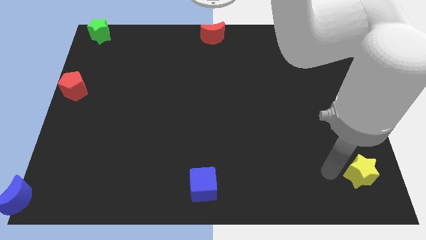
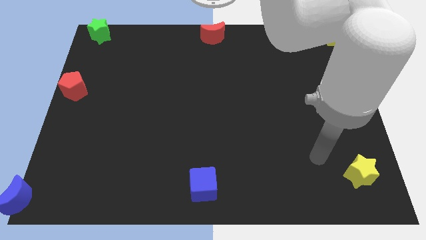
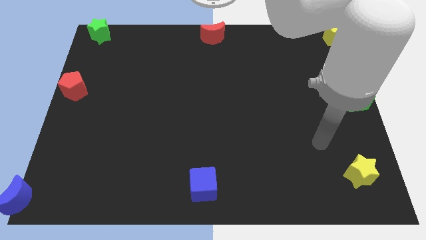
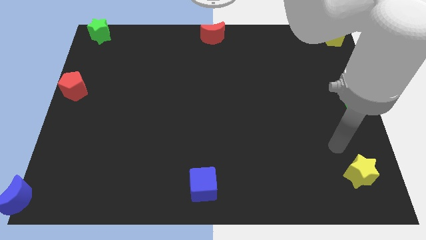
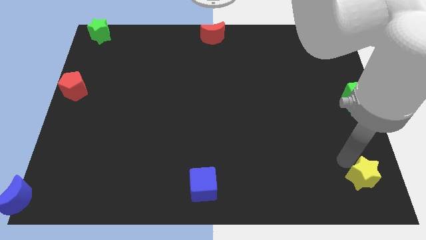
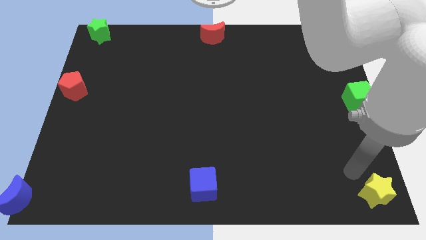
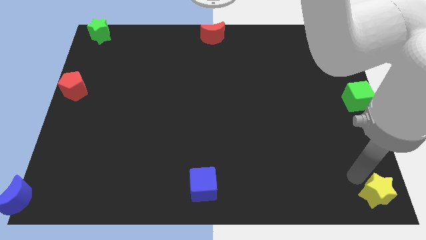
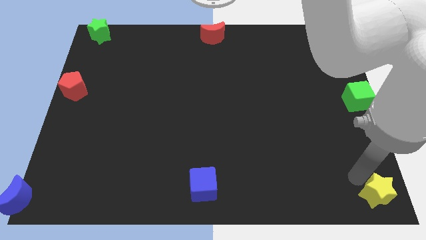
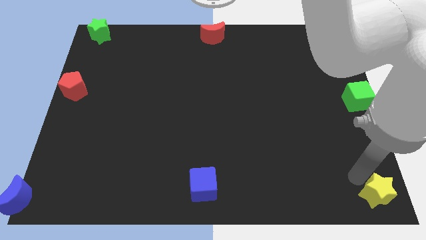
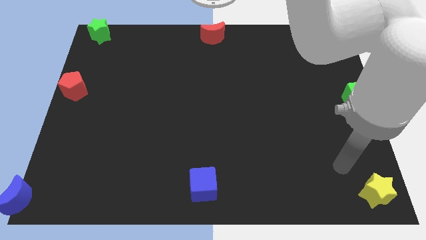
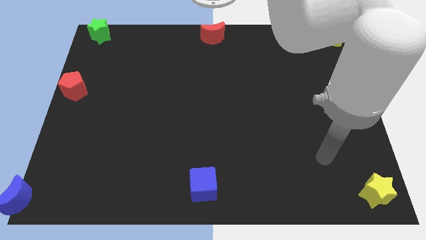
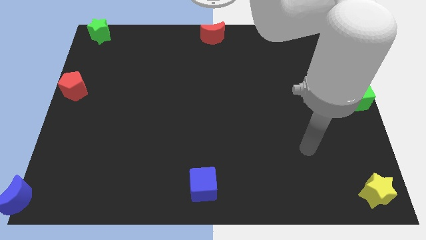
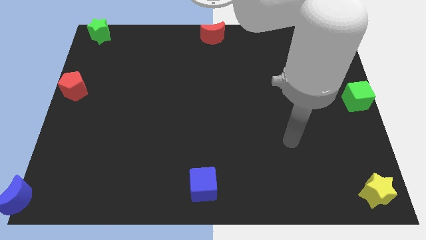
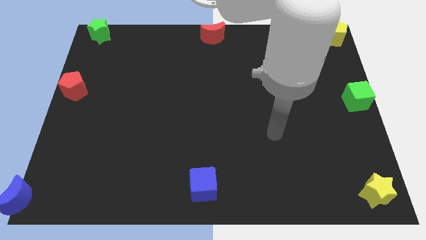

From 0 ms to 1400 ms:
push the yellow star move the arm away

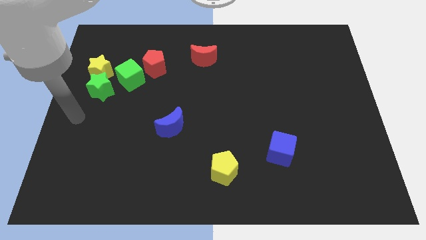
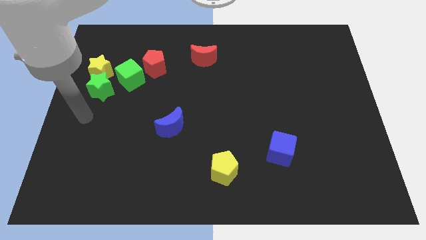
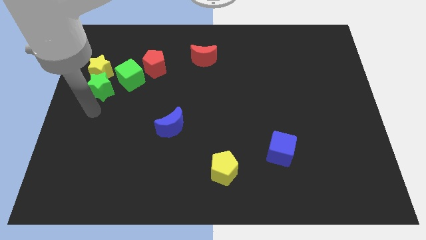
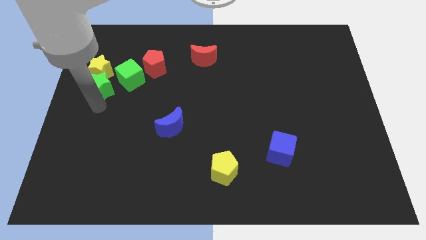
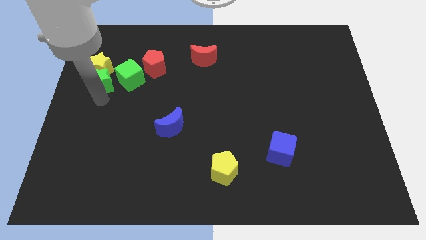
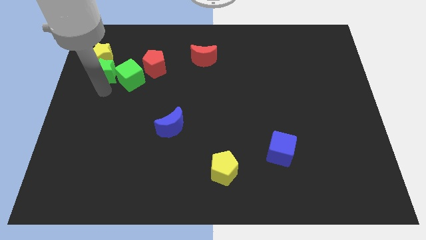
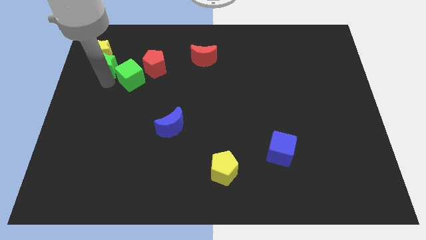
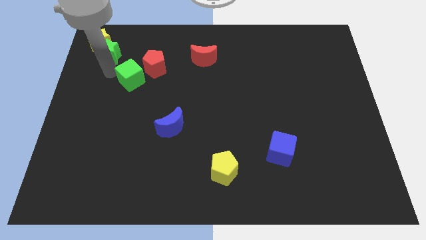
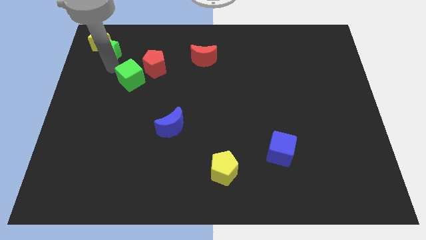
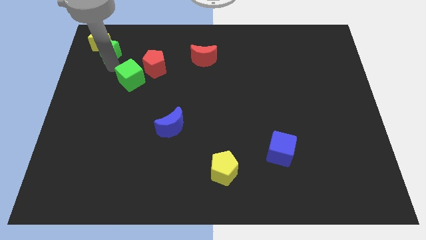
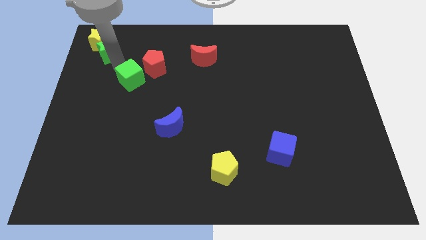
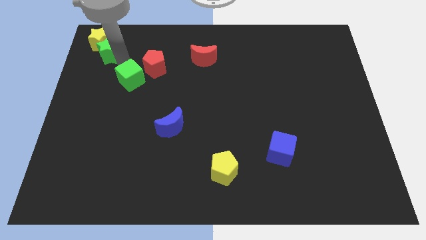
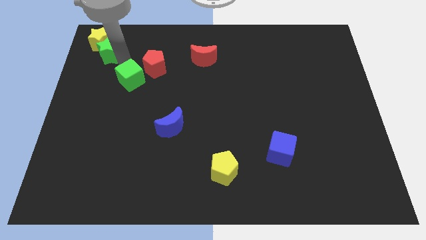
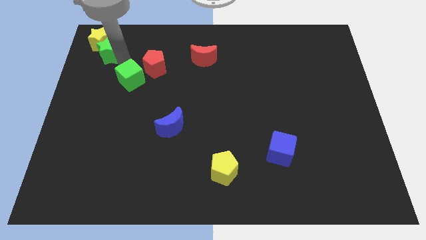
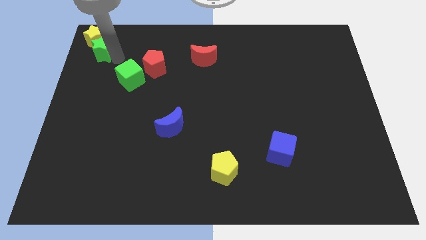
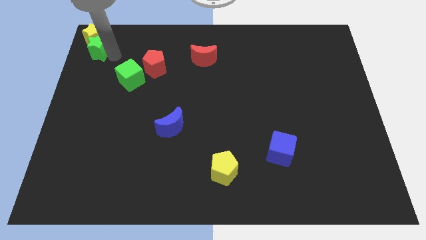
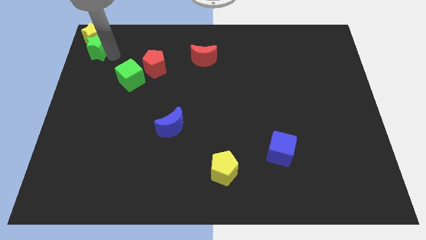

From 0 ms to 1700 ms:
slide the green star and yellow star to the top left corner of the board

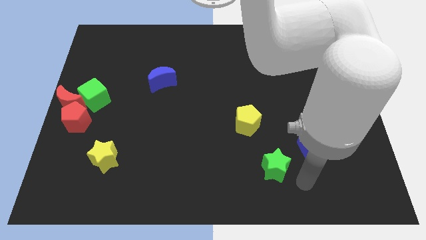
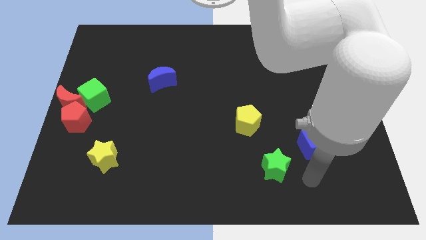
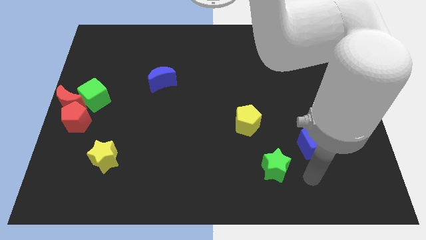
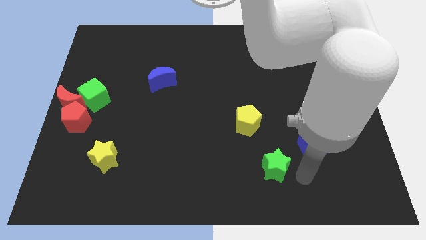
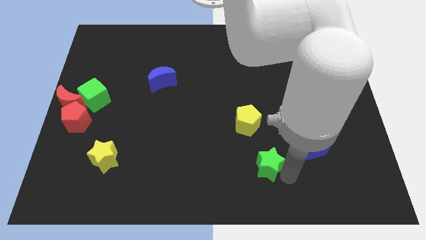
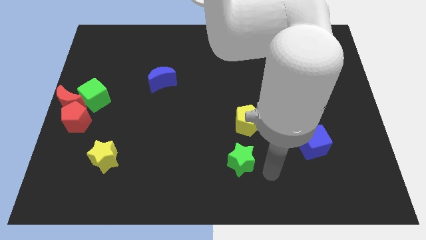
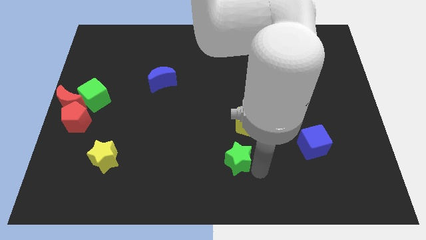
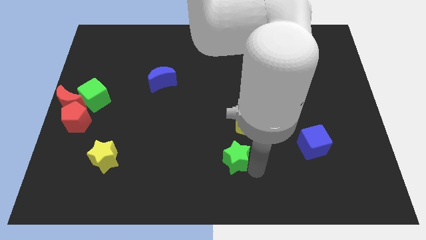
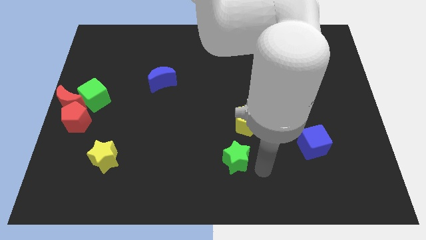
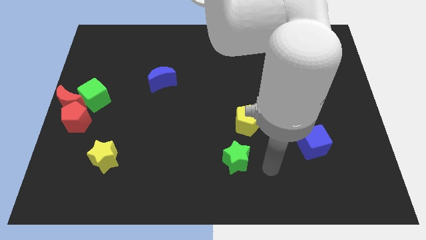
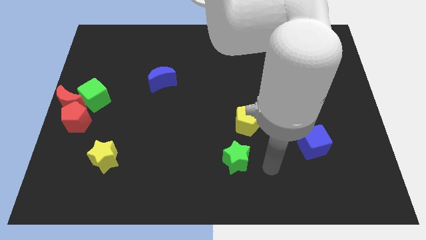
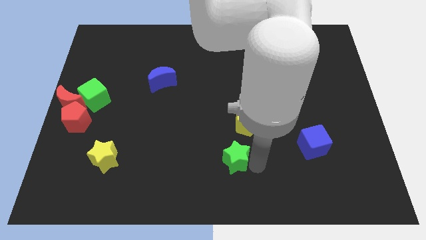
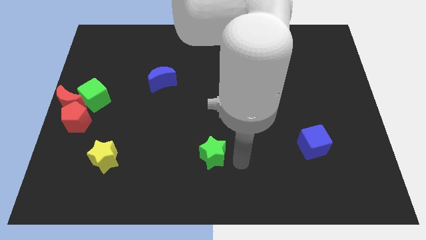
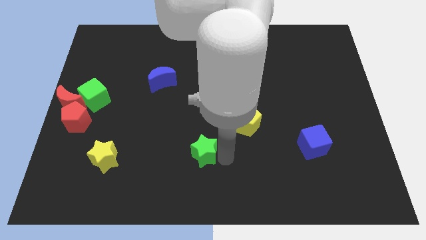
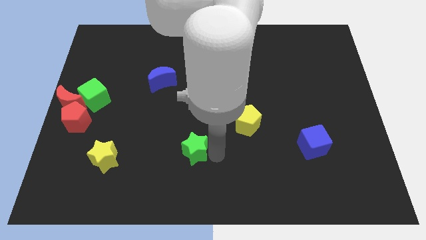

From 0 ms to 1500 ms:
place the green star parallel to the yellow star

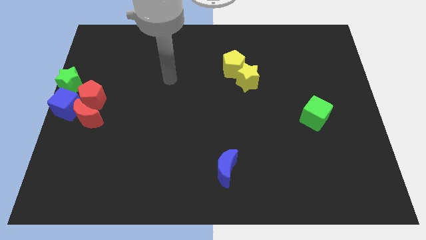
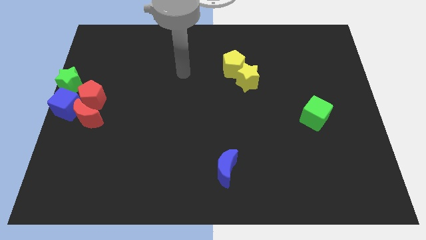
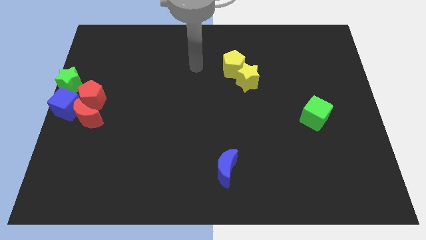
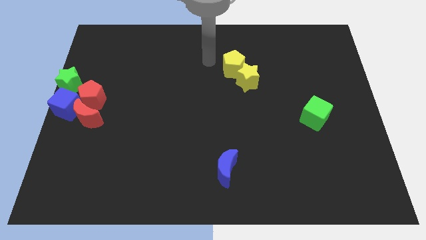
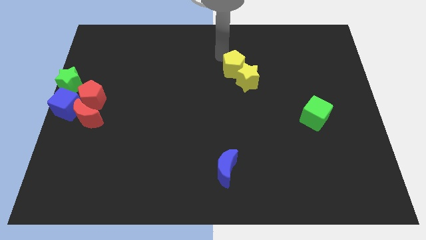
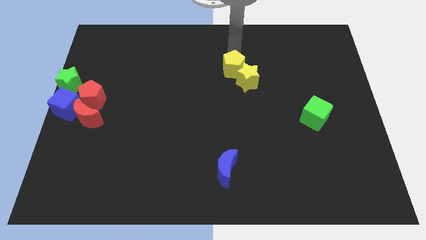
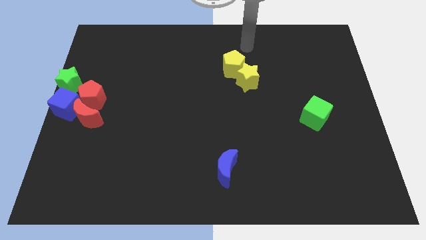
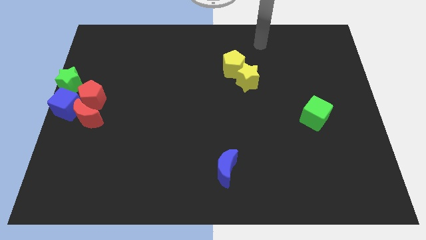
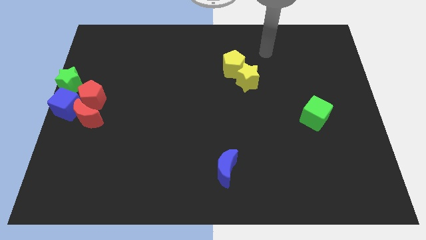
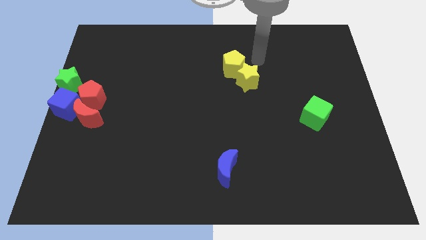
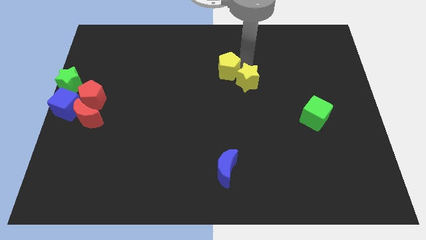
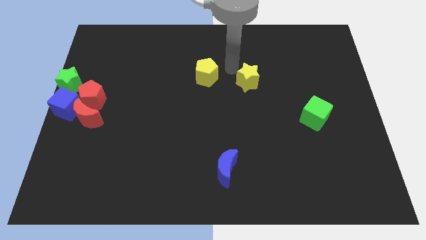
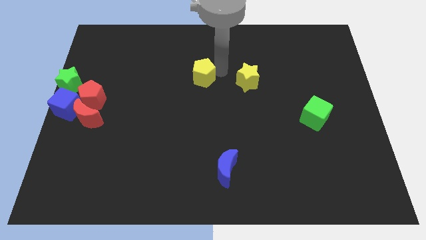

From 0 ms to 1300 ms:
place yellow pentagon to the left of the yellow star

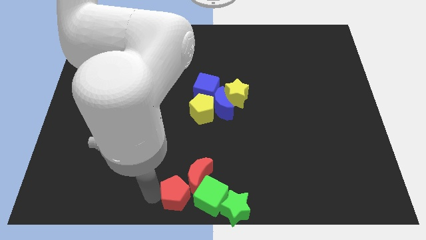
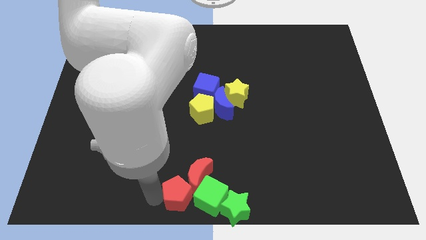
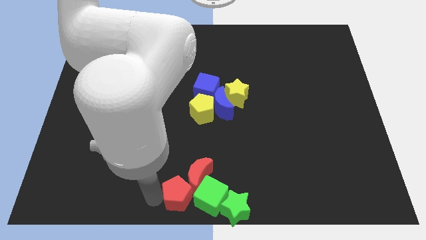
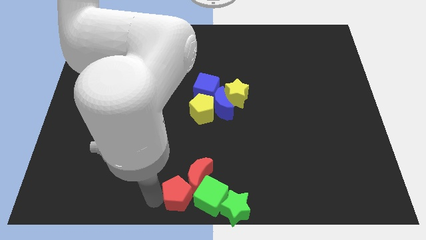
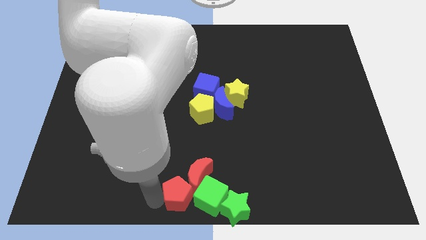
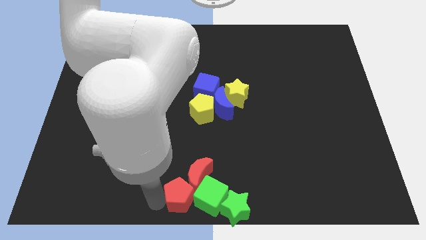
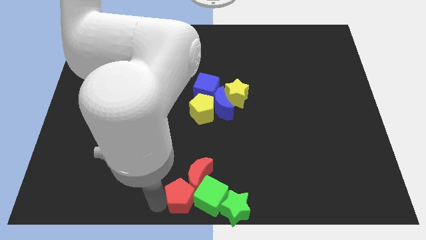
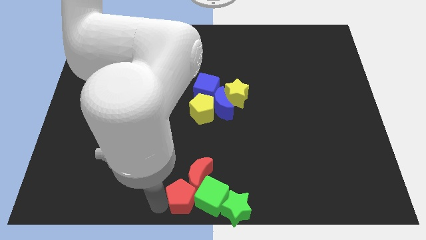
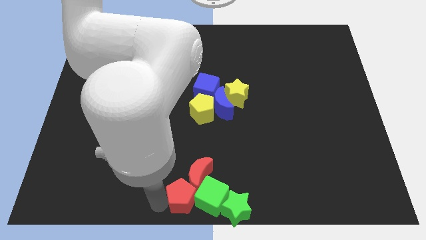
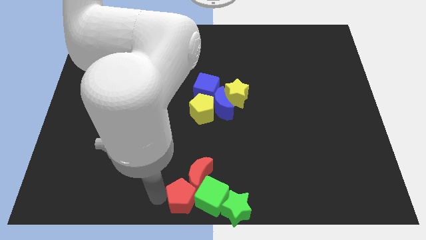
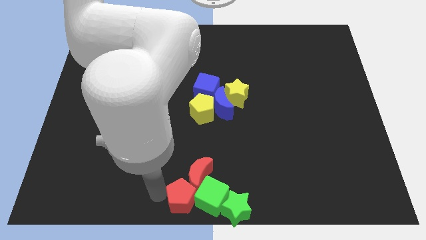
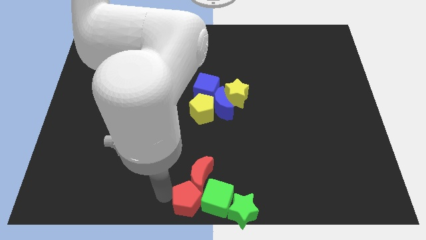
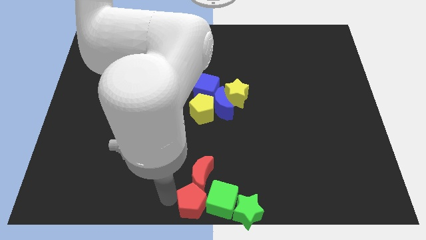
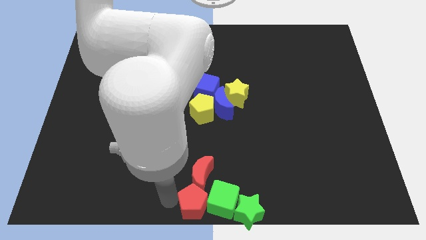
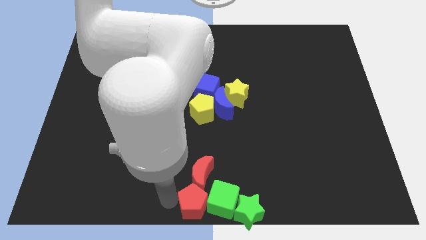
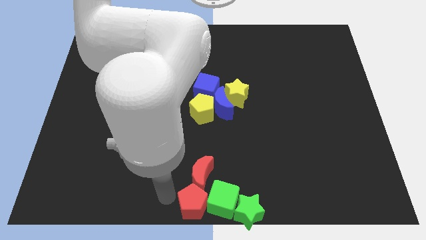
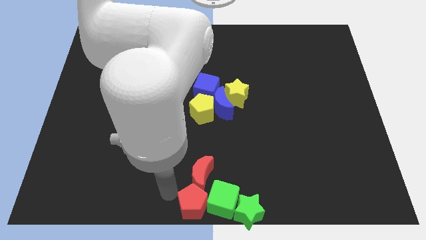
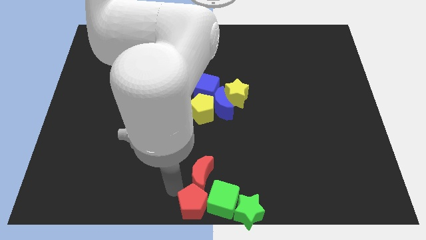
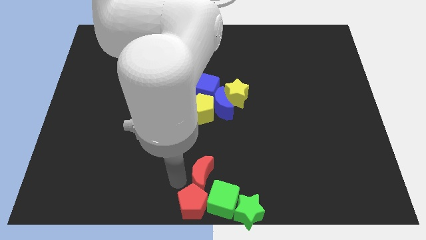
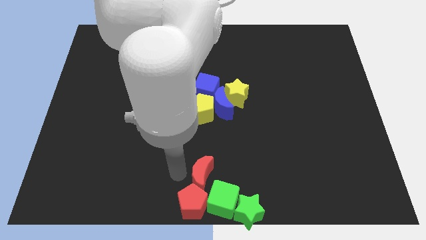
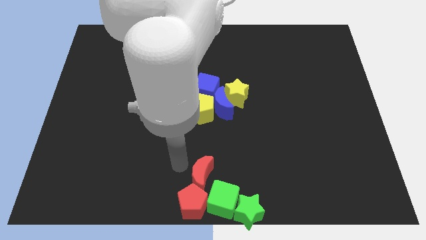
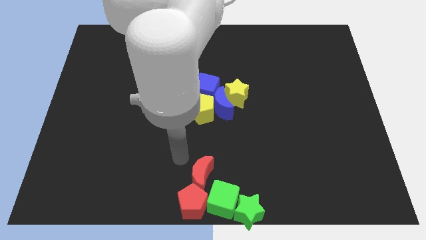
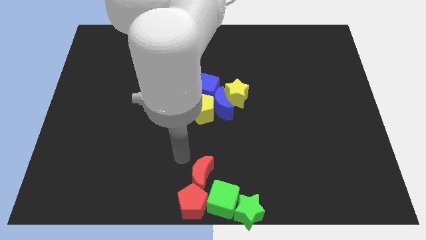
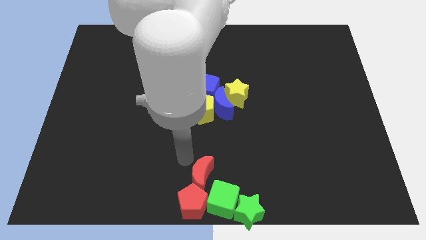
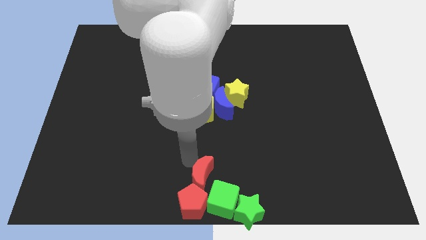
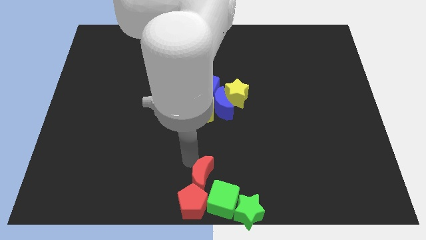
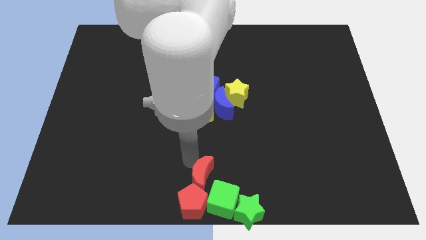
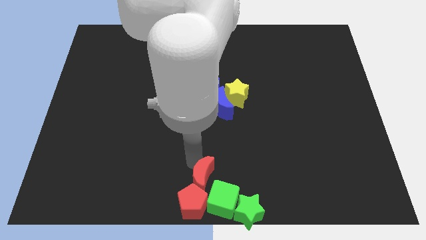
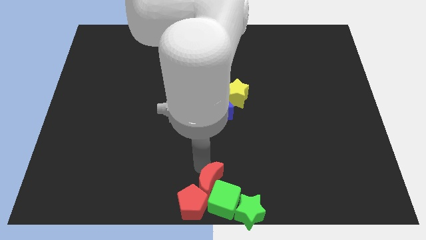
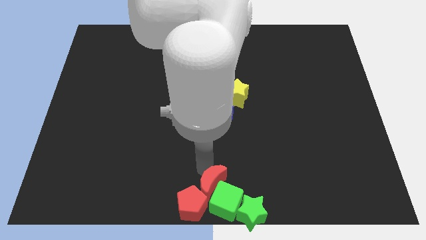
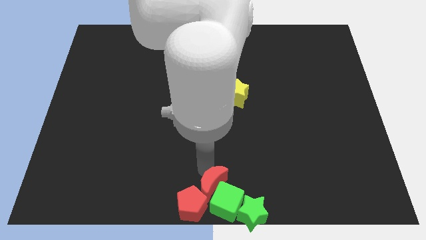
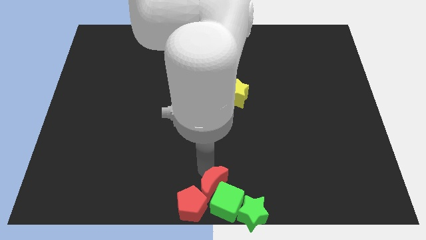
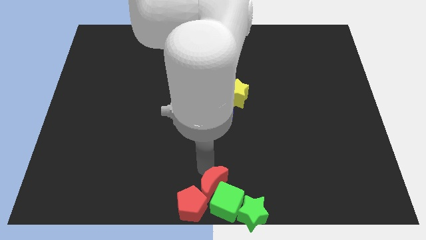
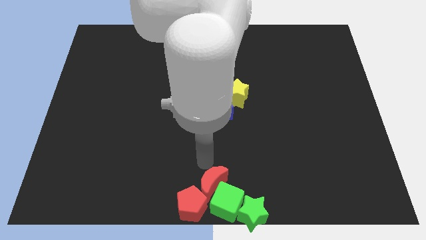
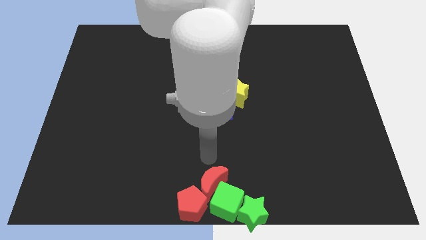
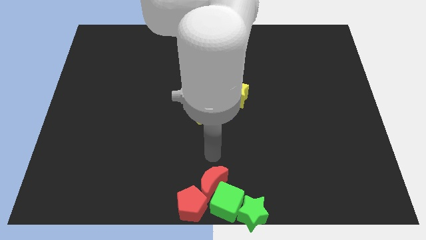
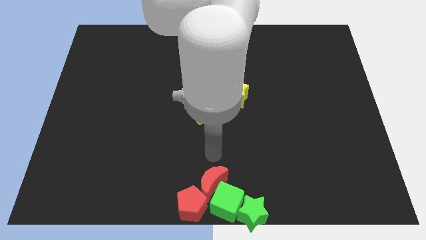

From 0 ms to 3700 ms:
push the red blocks into the green blocks
